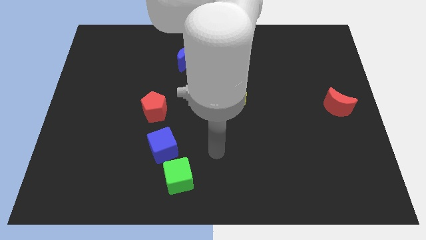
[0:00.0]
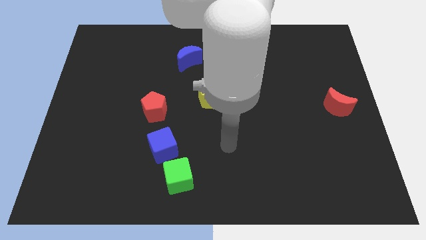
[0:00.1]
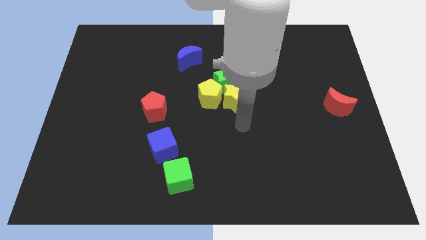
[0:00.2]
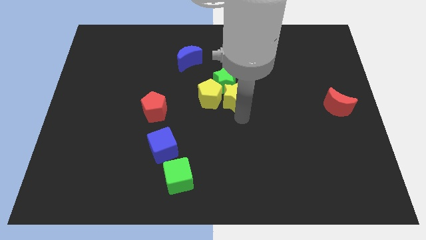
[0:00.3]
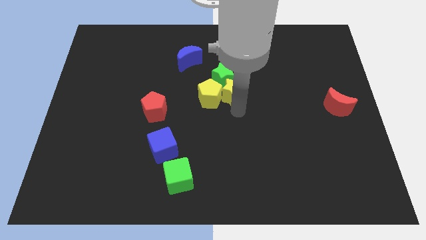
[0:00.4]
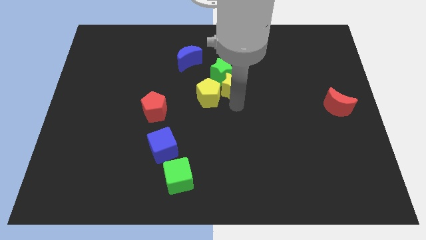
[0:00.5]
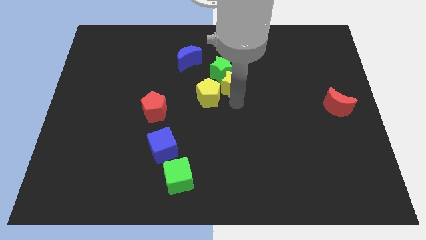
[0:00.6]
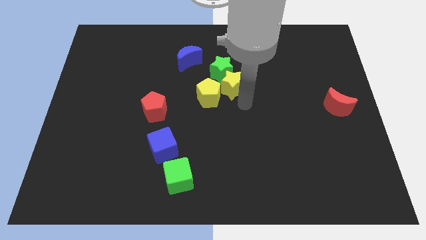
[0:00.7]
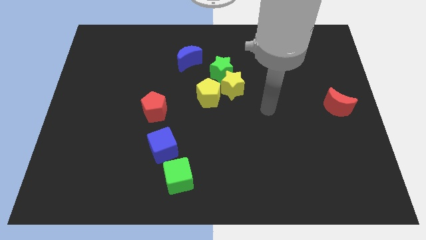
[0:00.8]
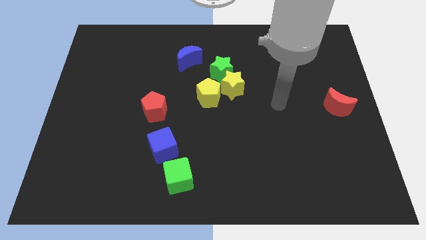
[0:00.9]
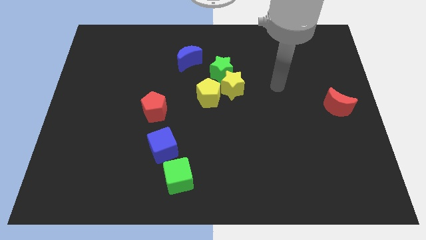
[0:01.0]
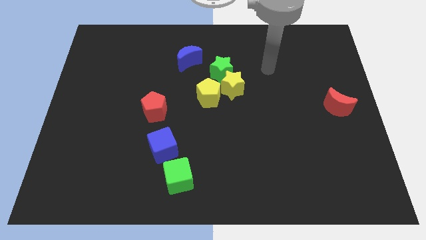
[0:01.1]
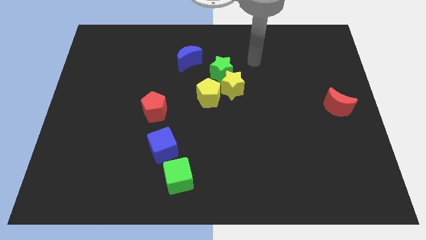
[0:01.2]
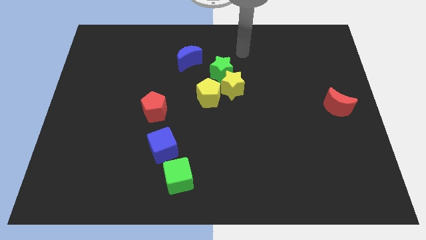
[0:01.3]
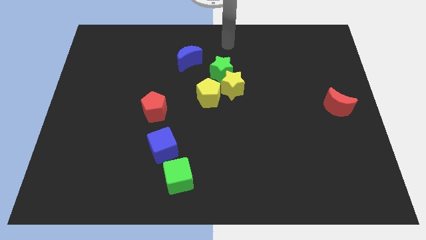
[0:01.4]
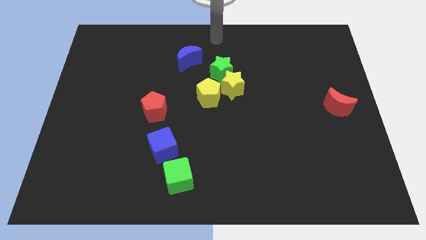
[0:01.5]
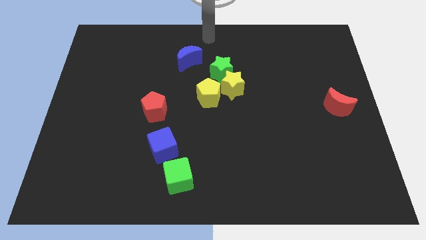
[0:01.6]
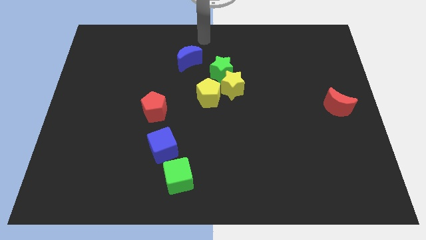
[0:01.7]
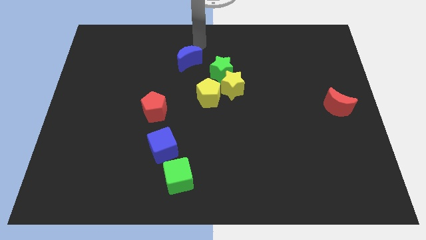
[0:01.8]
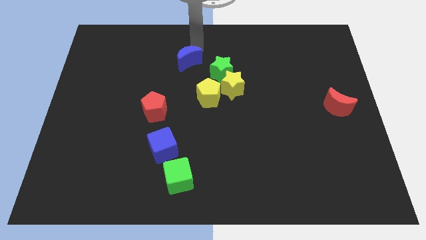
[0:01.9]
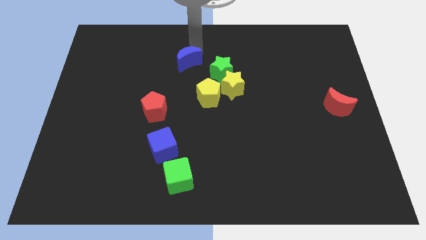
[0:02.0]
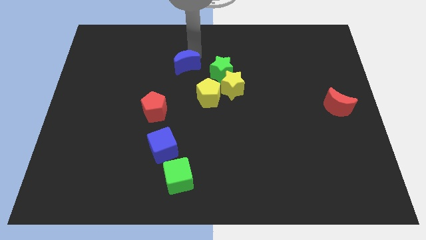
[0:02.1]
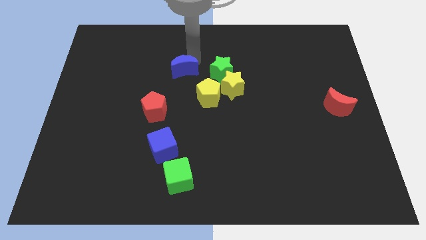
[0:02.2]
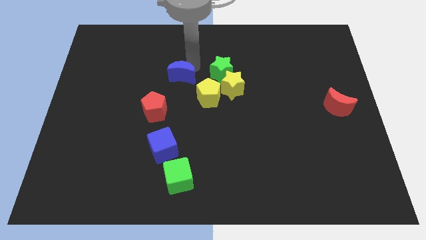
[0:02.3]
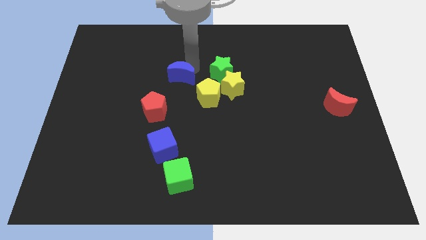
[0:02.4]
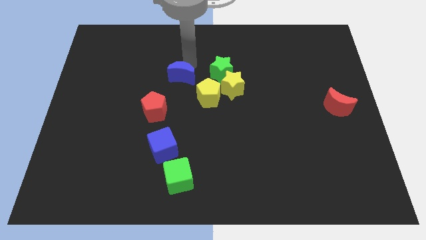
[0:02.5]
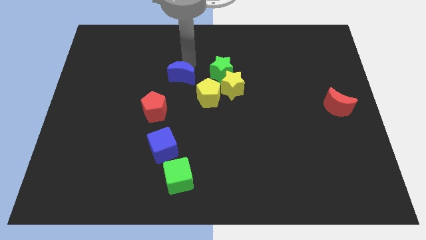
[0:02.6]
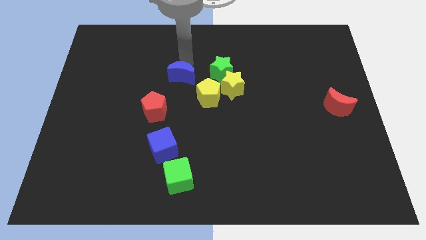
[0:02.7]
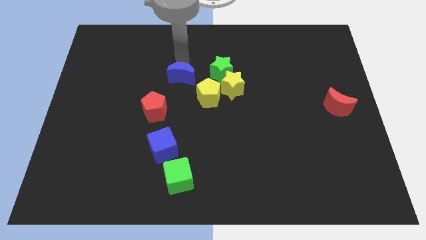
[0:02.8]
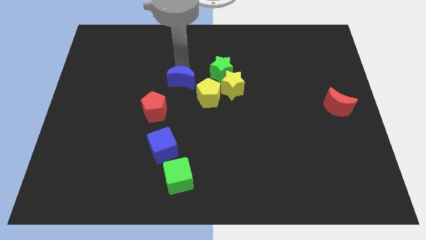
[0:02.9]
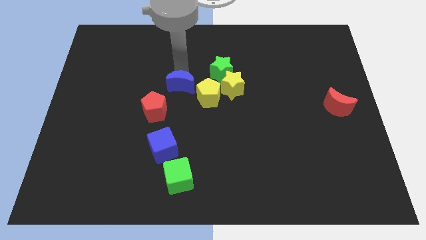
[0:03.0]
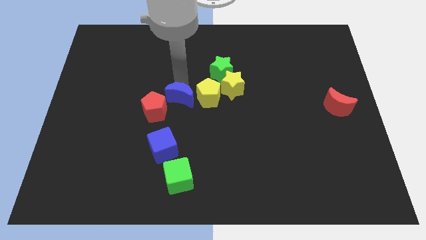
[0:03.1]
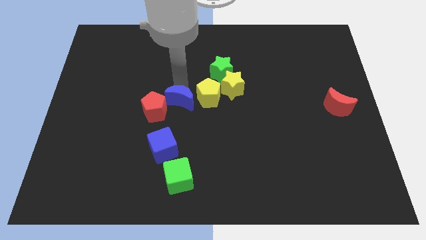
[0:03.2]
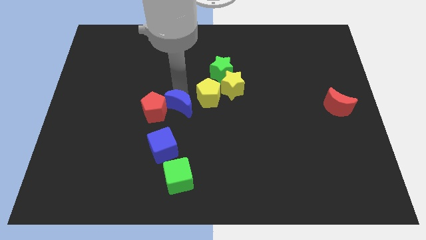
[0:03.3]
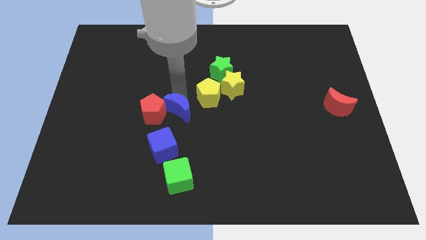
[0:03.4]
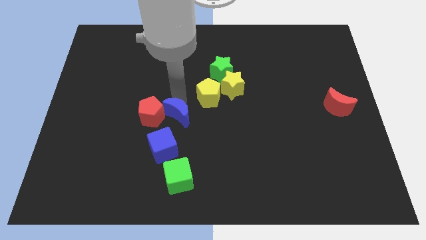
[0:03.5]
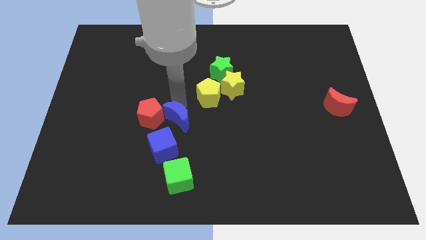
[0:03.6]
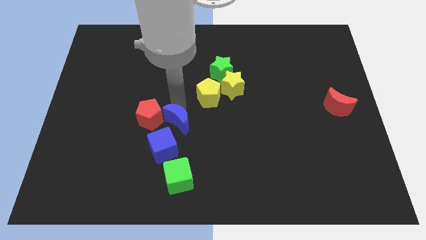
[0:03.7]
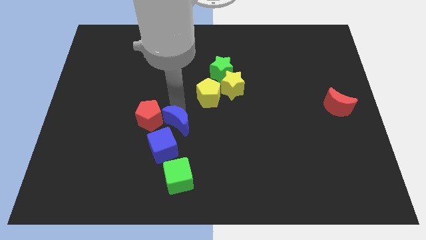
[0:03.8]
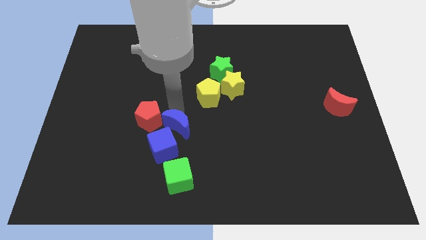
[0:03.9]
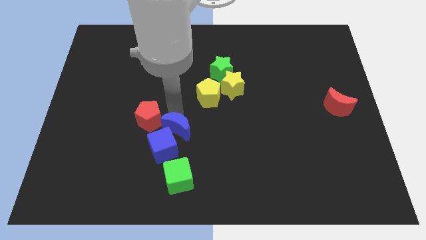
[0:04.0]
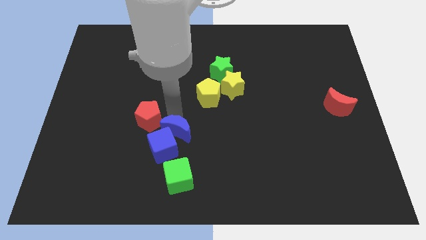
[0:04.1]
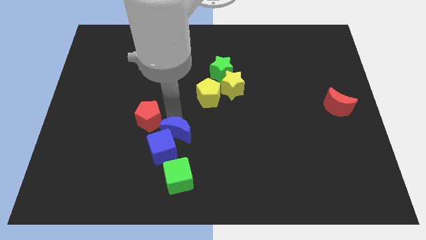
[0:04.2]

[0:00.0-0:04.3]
slide the blue moon towards the blue cube

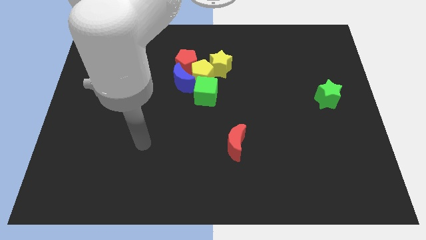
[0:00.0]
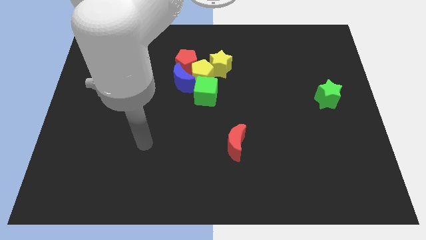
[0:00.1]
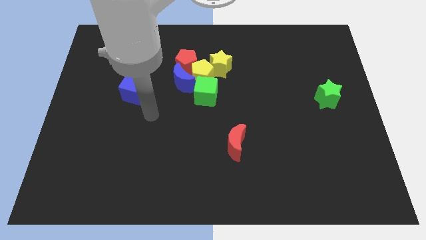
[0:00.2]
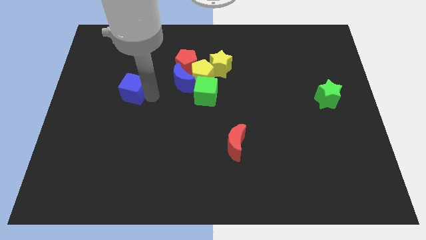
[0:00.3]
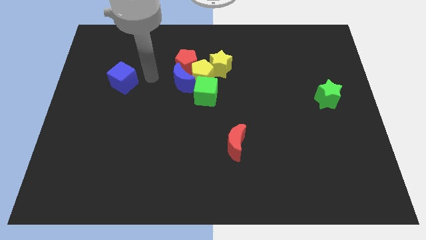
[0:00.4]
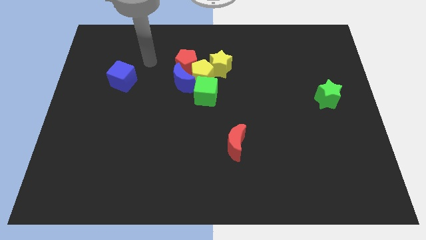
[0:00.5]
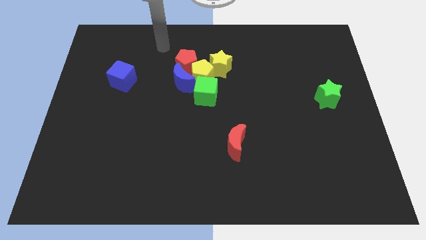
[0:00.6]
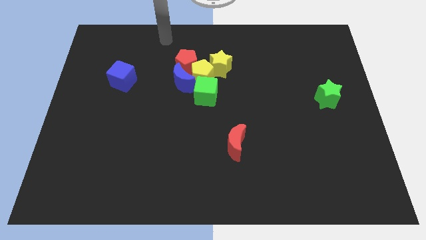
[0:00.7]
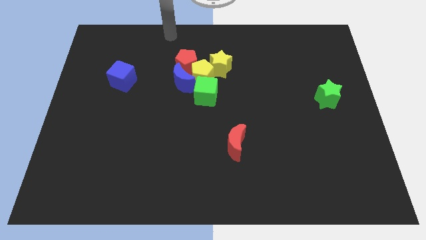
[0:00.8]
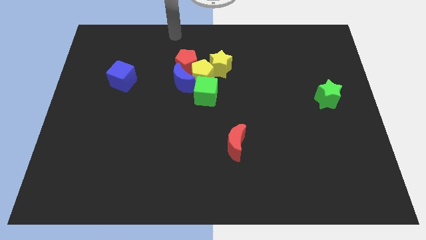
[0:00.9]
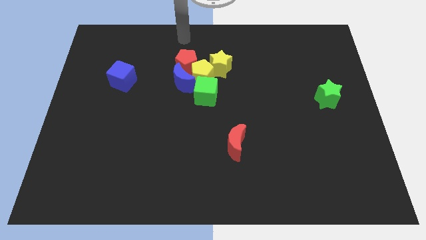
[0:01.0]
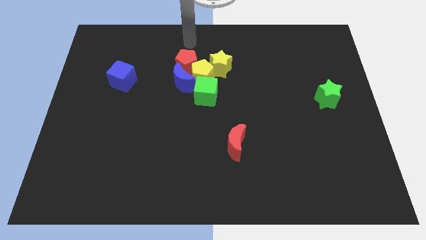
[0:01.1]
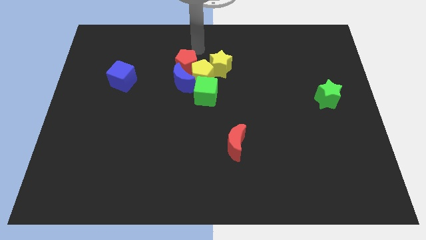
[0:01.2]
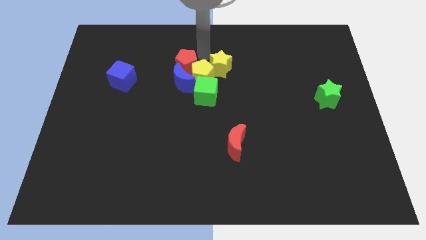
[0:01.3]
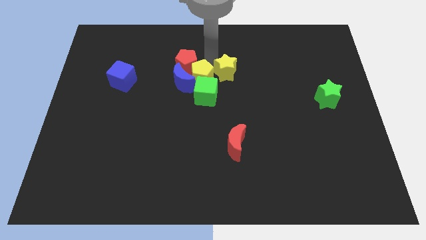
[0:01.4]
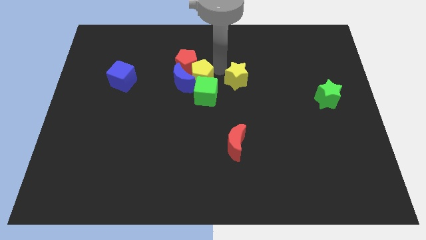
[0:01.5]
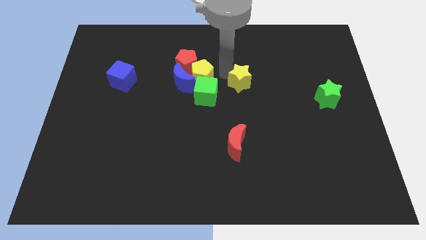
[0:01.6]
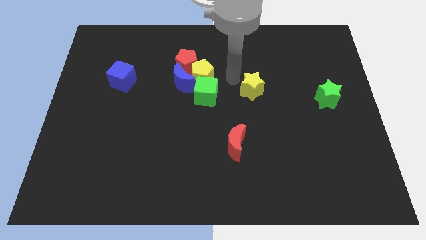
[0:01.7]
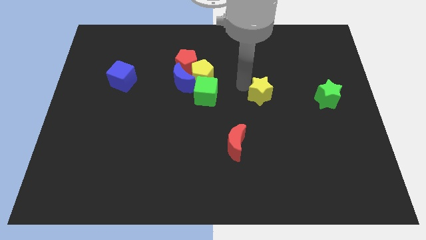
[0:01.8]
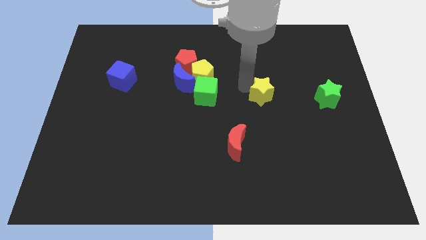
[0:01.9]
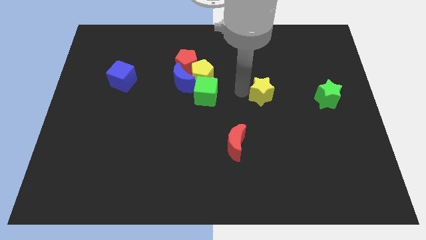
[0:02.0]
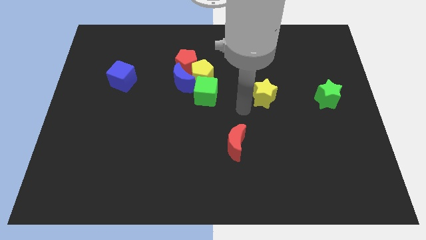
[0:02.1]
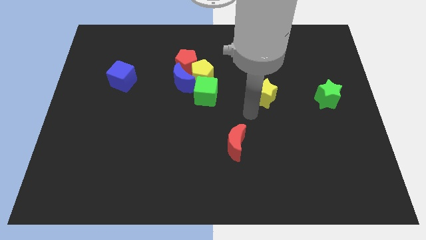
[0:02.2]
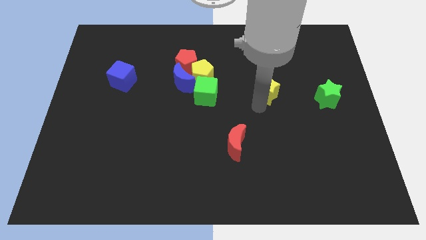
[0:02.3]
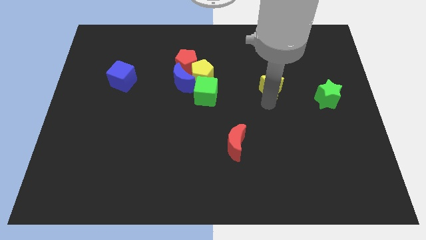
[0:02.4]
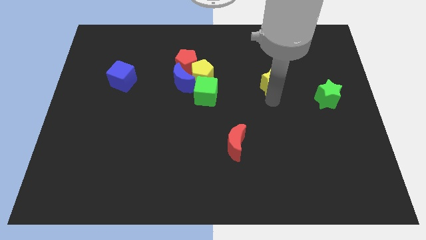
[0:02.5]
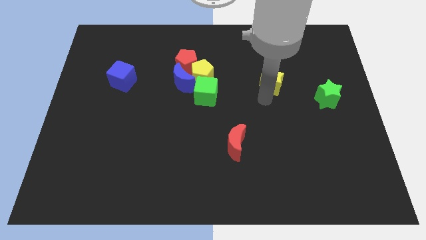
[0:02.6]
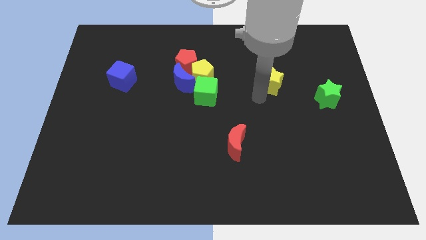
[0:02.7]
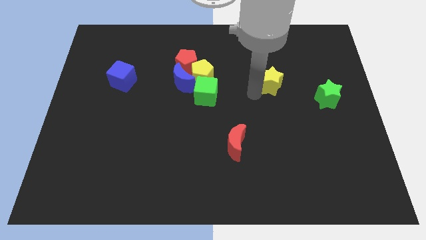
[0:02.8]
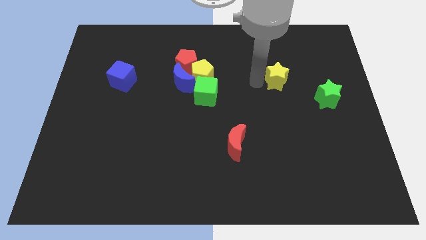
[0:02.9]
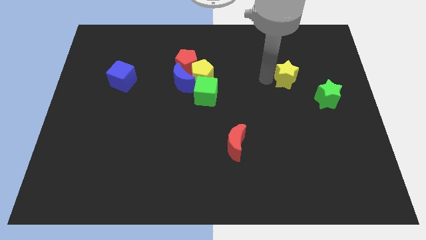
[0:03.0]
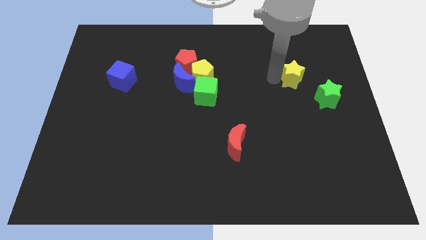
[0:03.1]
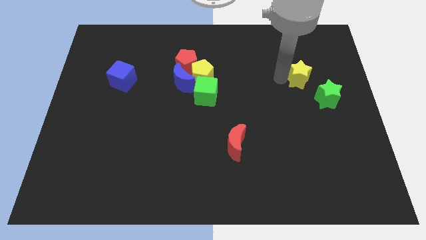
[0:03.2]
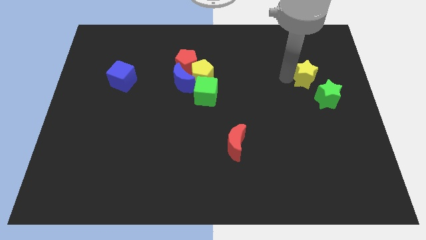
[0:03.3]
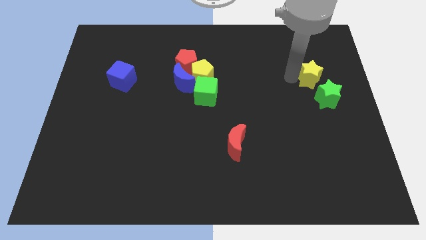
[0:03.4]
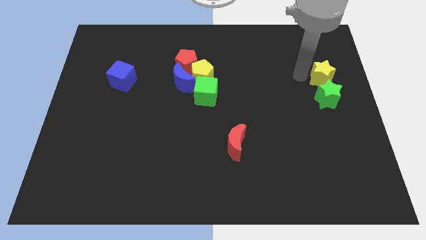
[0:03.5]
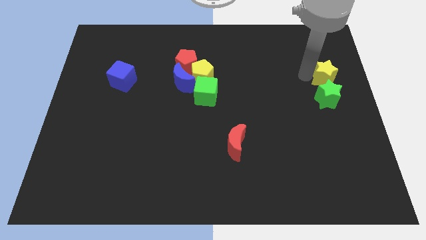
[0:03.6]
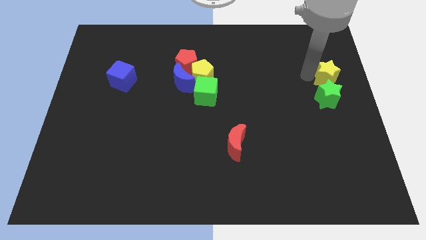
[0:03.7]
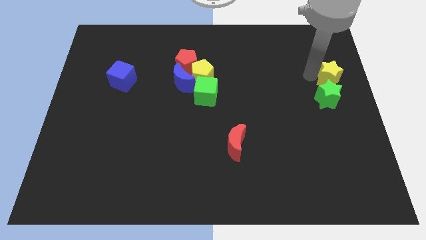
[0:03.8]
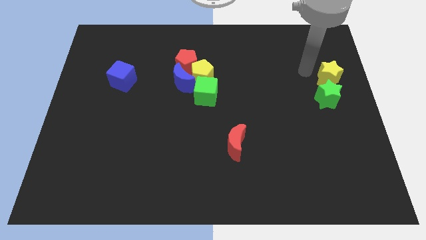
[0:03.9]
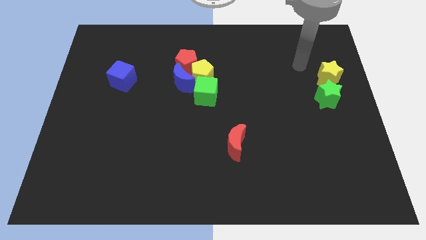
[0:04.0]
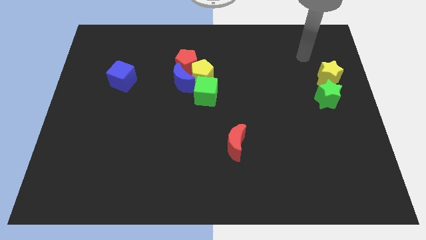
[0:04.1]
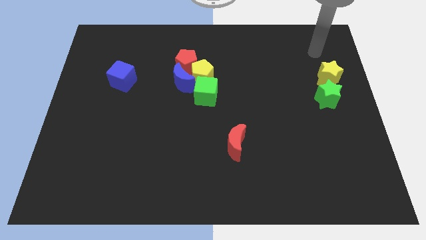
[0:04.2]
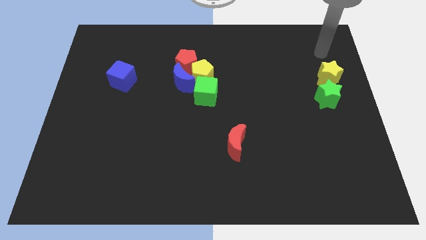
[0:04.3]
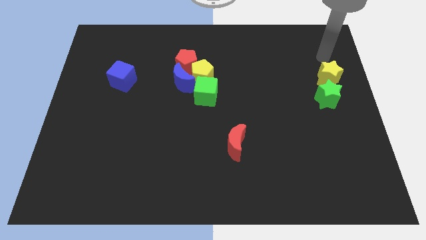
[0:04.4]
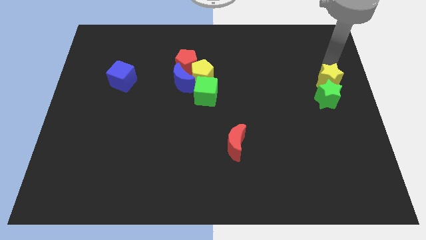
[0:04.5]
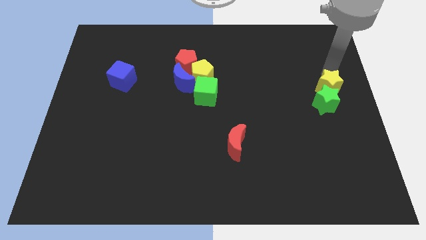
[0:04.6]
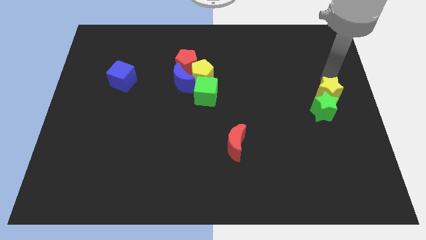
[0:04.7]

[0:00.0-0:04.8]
push the yellow star close to the green star
